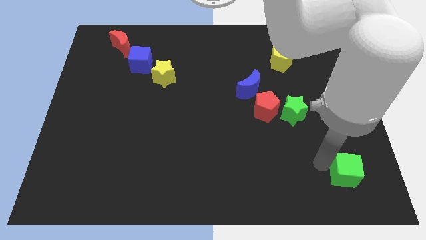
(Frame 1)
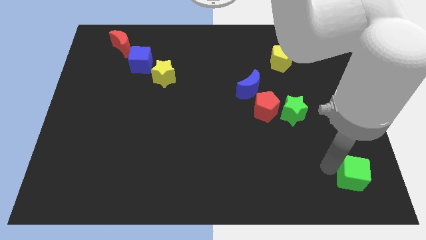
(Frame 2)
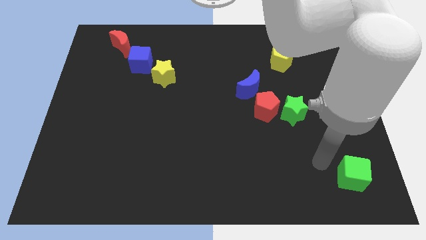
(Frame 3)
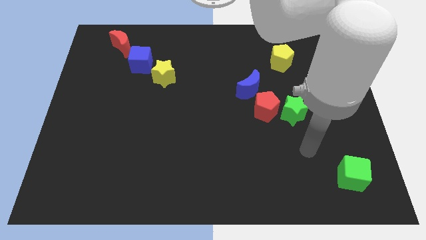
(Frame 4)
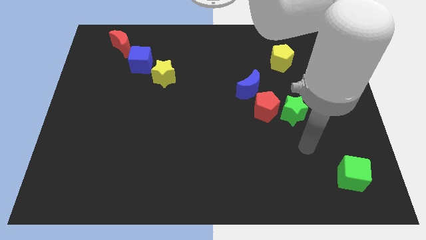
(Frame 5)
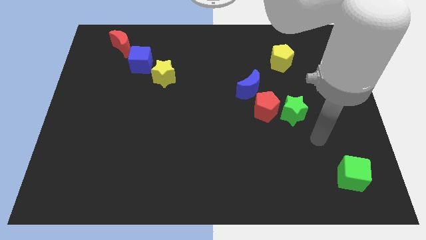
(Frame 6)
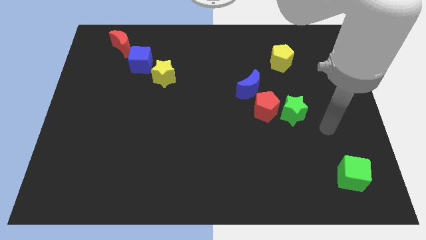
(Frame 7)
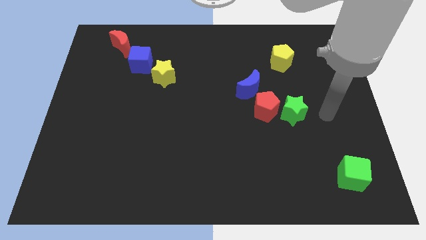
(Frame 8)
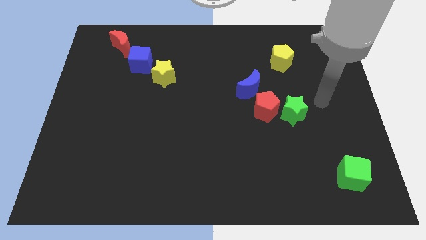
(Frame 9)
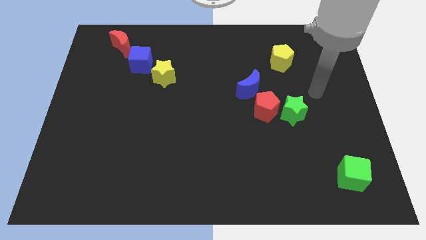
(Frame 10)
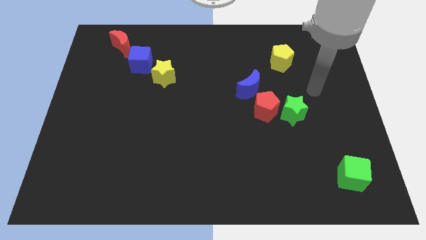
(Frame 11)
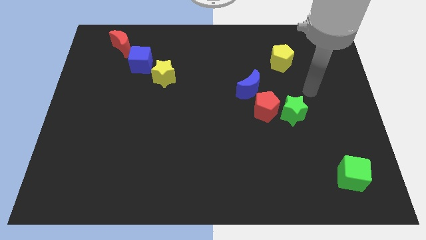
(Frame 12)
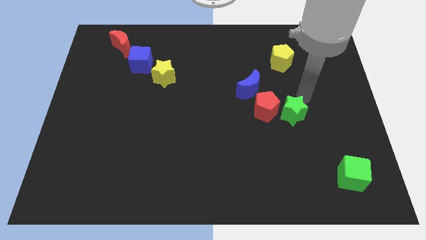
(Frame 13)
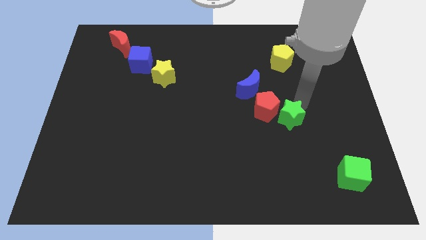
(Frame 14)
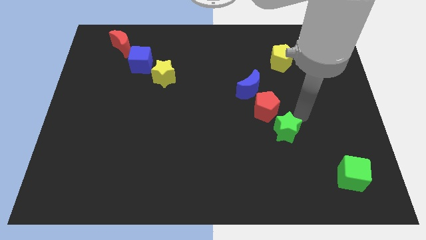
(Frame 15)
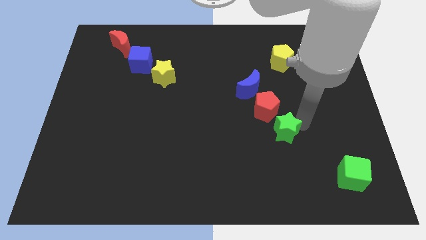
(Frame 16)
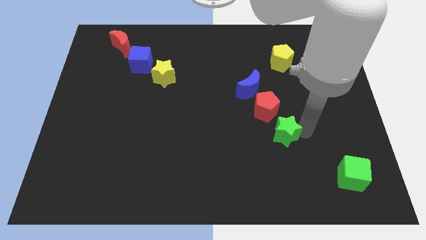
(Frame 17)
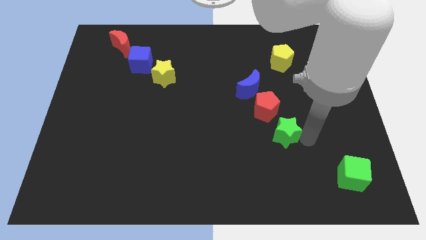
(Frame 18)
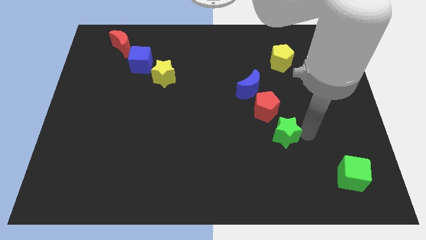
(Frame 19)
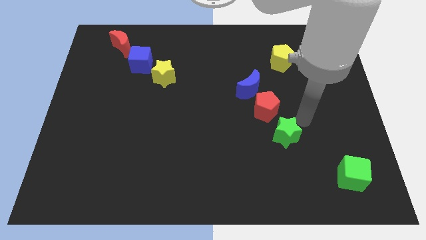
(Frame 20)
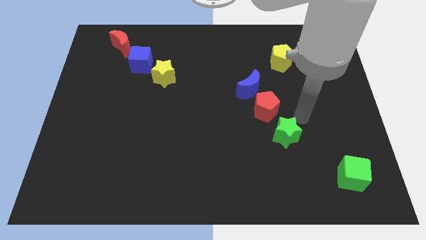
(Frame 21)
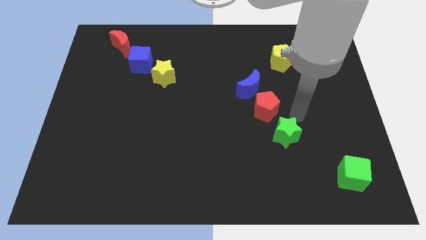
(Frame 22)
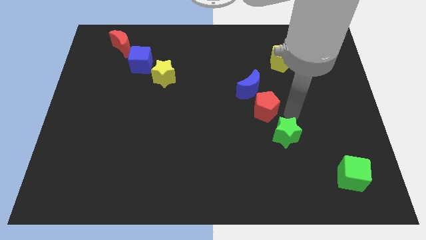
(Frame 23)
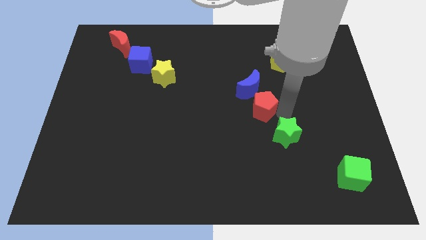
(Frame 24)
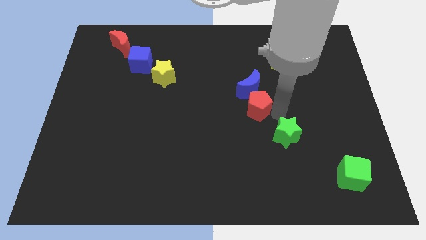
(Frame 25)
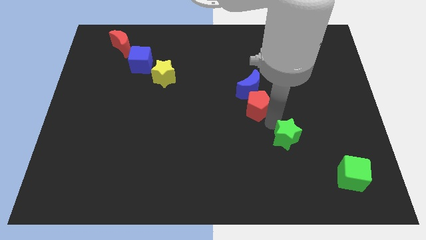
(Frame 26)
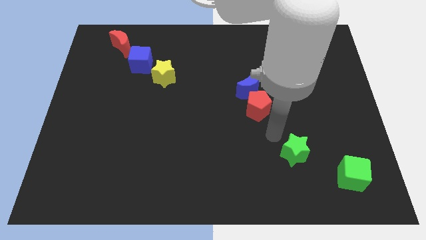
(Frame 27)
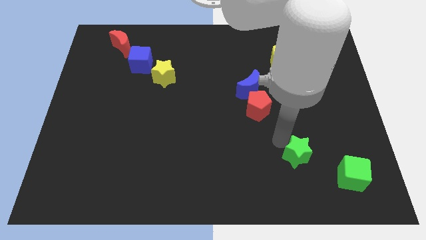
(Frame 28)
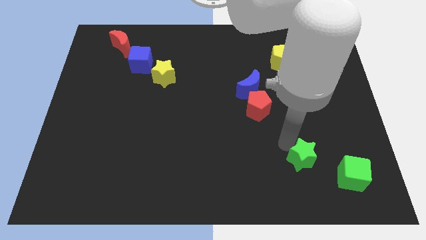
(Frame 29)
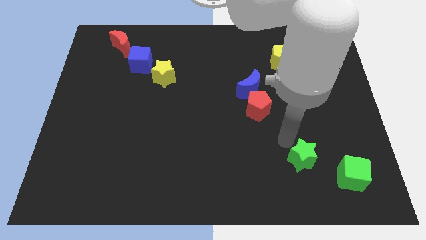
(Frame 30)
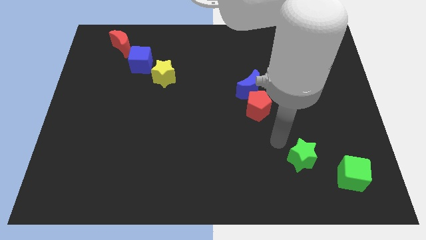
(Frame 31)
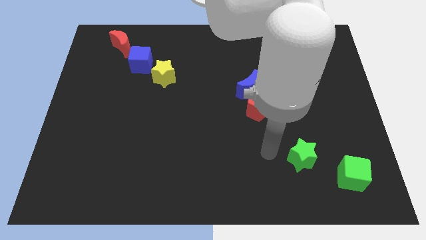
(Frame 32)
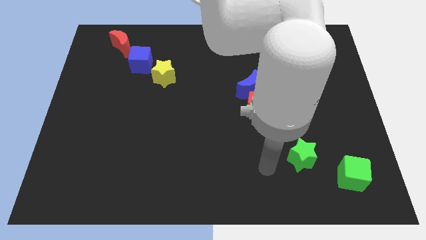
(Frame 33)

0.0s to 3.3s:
place the green star left to the green cube

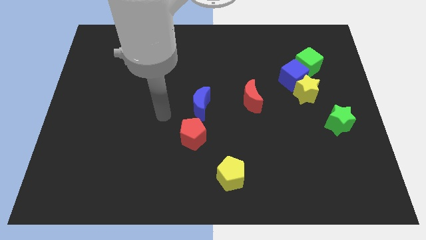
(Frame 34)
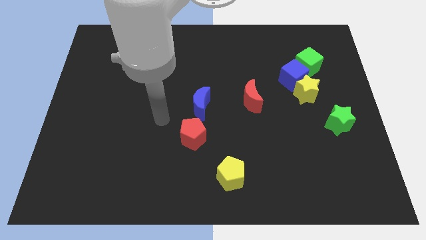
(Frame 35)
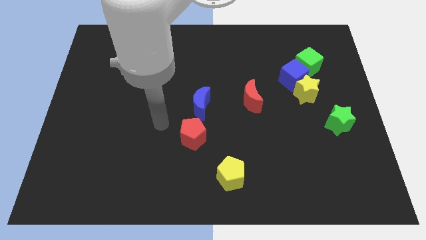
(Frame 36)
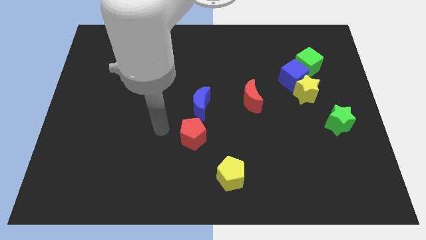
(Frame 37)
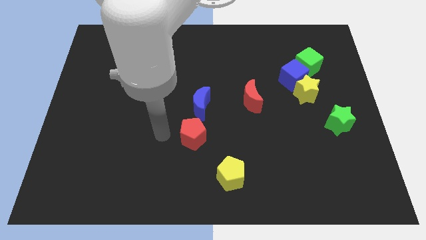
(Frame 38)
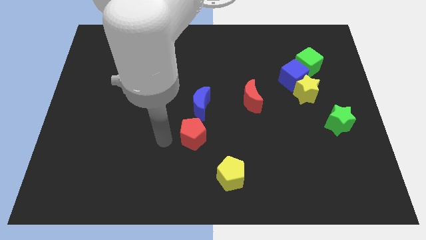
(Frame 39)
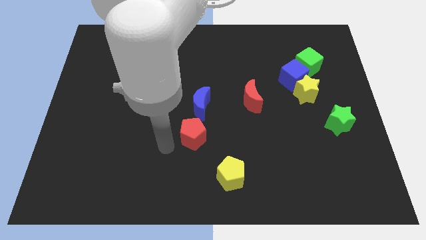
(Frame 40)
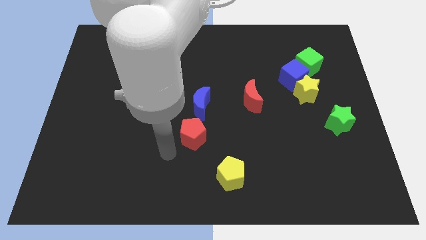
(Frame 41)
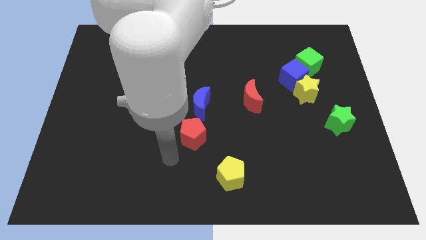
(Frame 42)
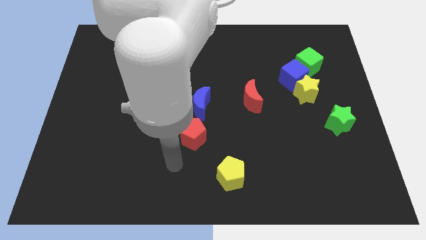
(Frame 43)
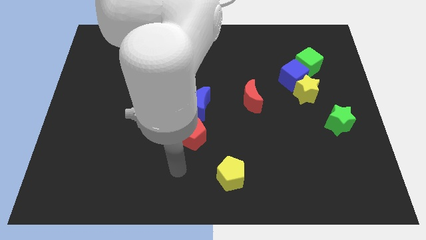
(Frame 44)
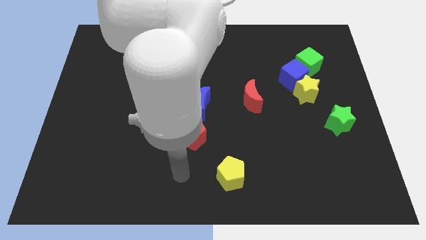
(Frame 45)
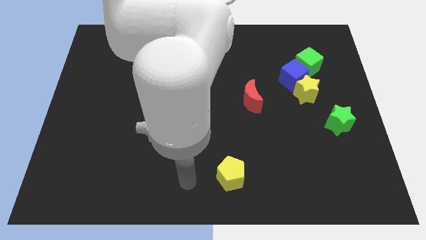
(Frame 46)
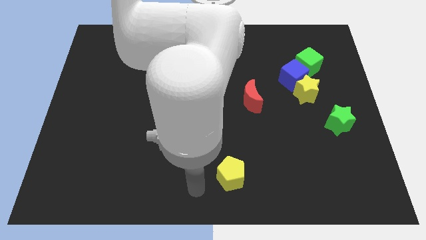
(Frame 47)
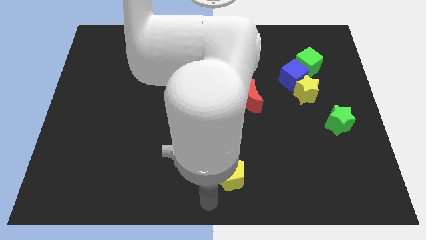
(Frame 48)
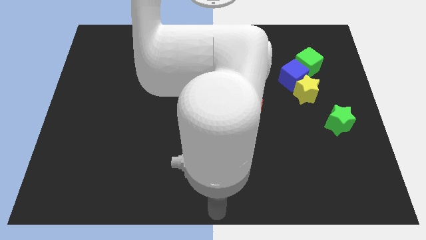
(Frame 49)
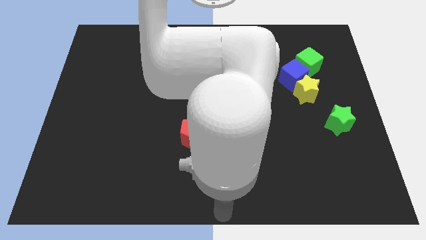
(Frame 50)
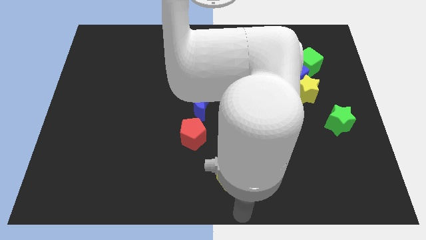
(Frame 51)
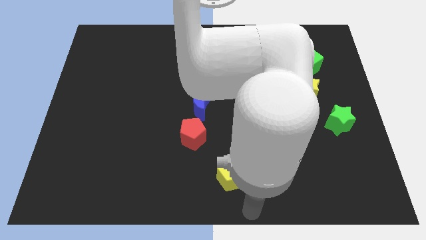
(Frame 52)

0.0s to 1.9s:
move the arm towards the bottom of the yellow pentagon

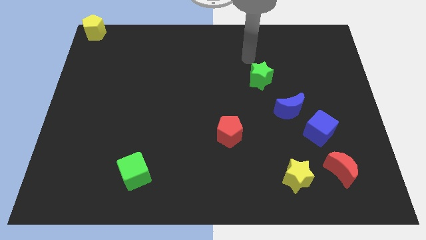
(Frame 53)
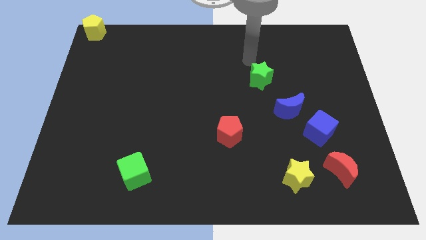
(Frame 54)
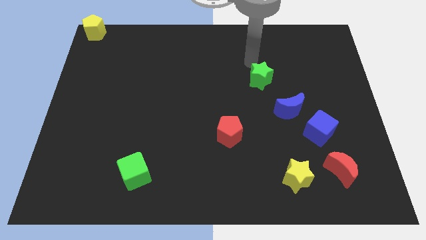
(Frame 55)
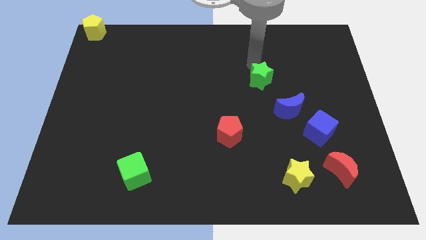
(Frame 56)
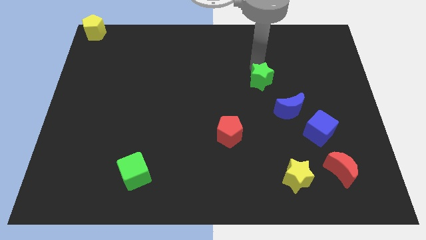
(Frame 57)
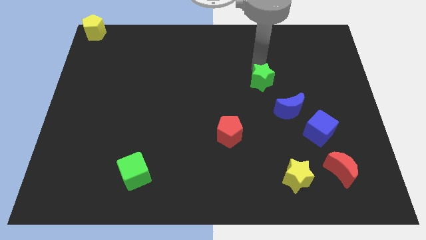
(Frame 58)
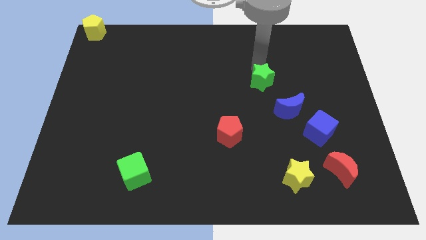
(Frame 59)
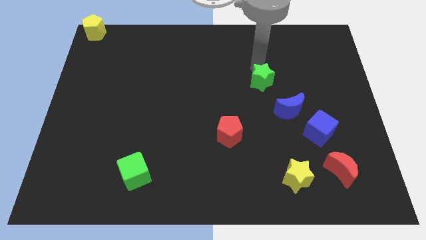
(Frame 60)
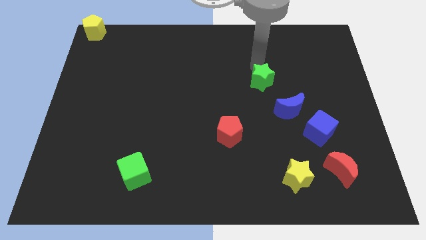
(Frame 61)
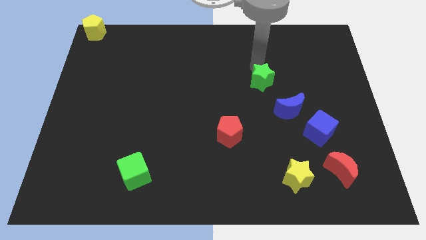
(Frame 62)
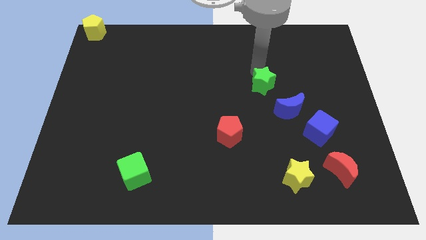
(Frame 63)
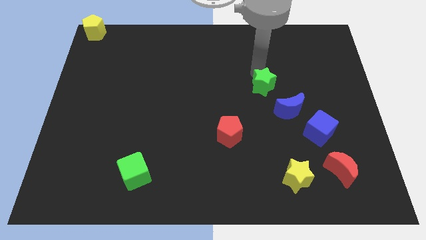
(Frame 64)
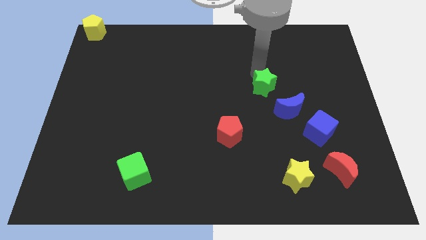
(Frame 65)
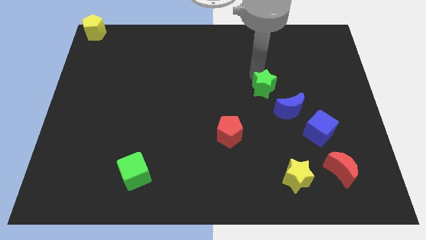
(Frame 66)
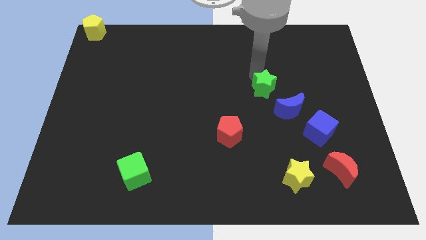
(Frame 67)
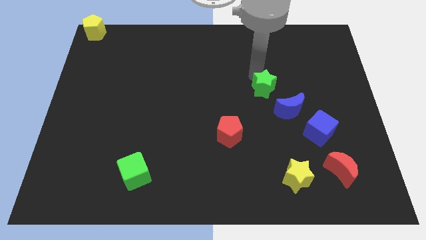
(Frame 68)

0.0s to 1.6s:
move the green star down slightly to the center of the board

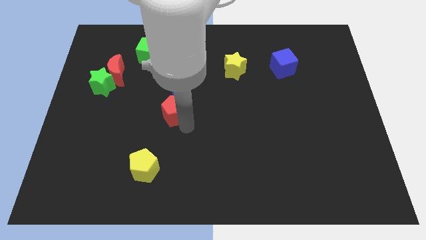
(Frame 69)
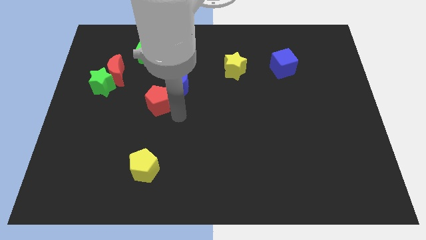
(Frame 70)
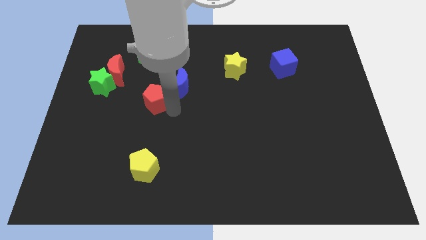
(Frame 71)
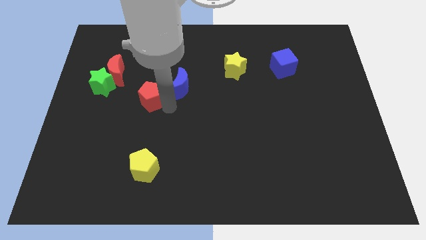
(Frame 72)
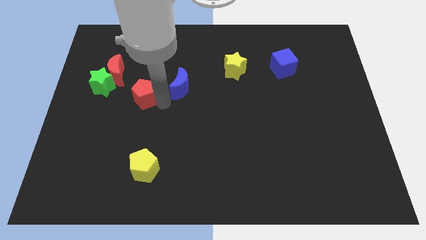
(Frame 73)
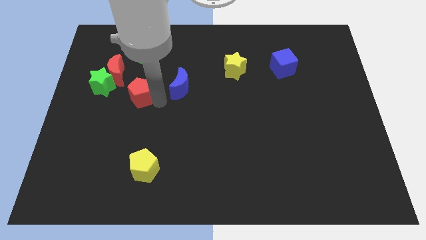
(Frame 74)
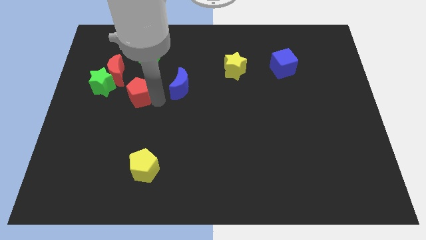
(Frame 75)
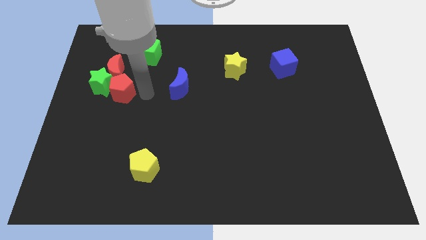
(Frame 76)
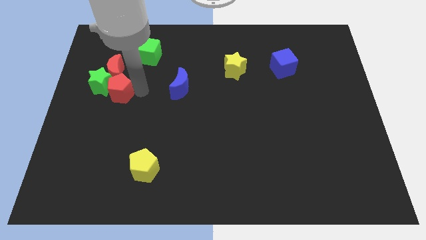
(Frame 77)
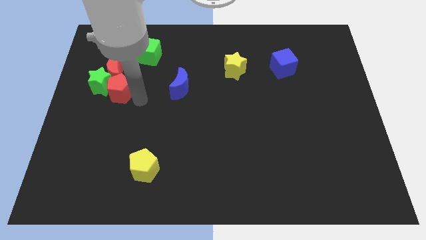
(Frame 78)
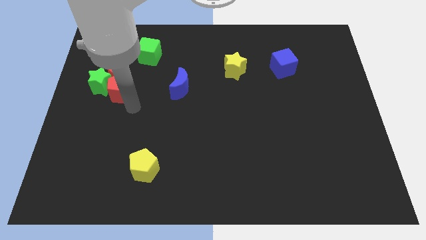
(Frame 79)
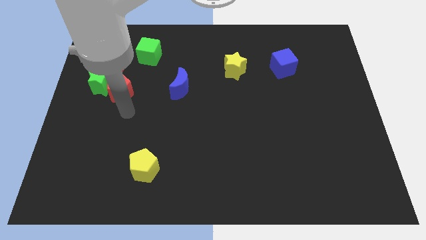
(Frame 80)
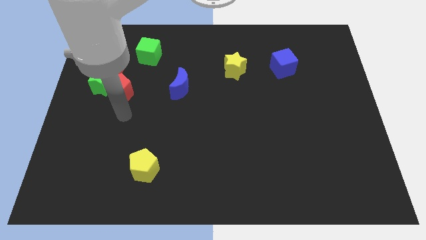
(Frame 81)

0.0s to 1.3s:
push the red pentagon into the green star and the red crescent

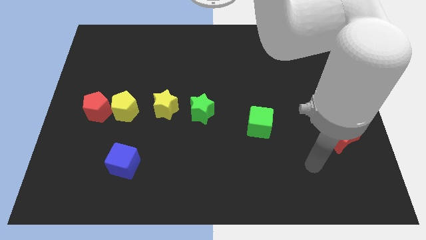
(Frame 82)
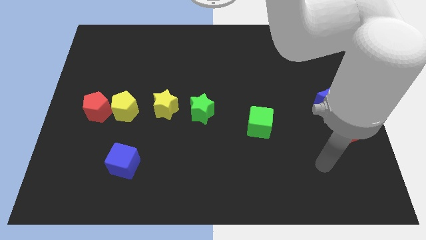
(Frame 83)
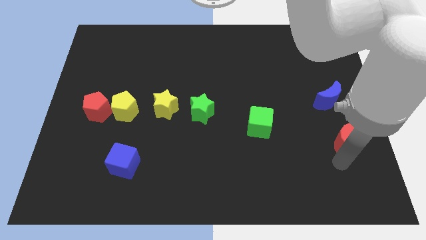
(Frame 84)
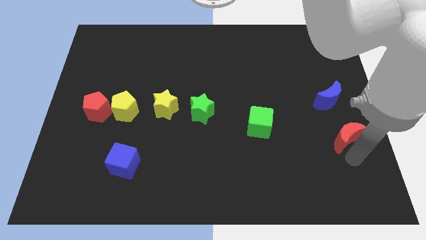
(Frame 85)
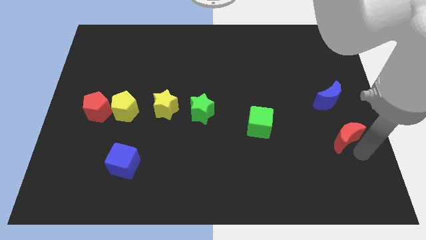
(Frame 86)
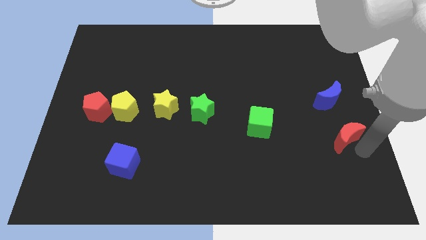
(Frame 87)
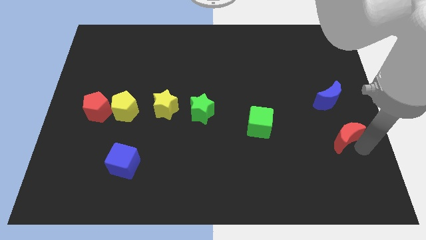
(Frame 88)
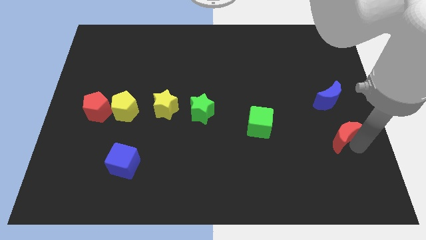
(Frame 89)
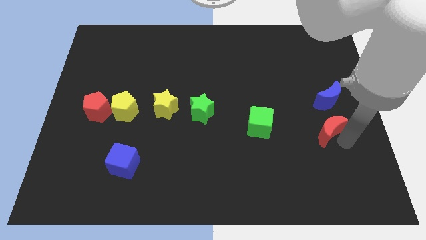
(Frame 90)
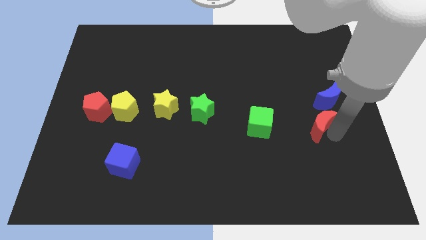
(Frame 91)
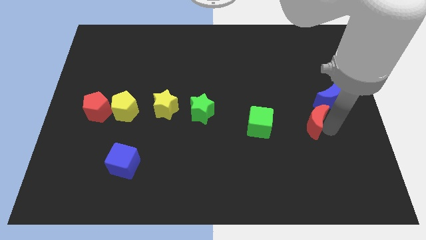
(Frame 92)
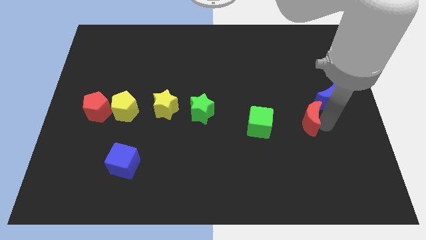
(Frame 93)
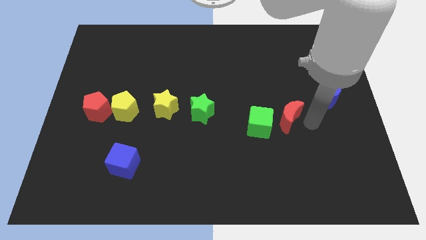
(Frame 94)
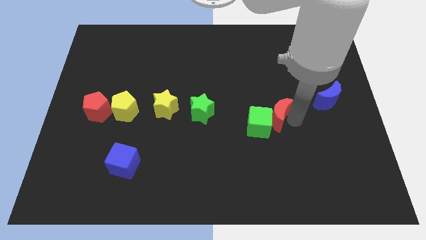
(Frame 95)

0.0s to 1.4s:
move the red crescent into the green cube
